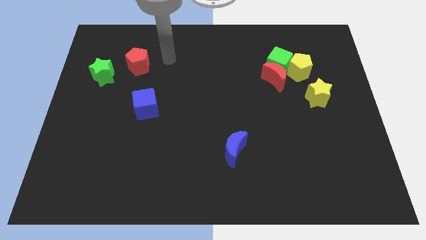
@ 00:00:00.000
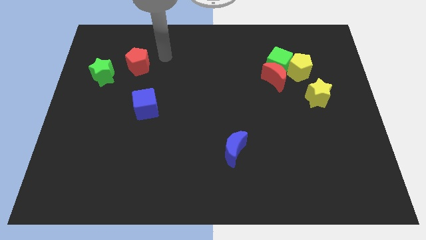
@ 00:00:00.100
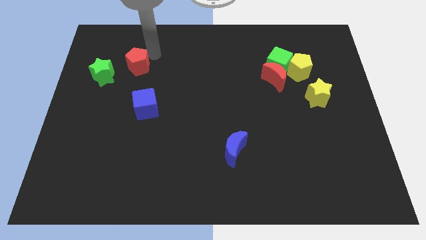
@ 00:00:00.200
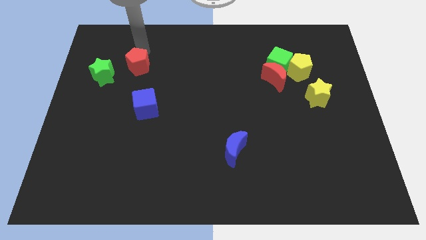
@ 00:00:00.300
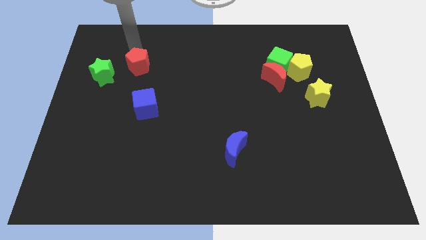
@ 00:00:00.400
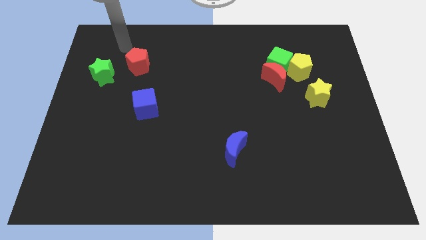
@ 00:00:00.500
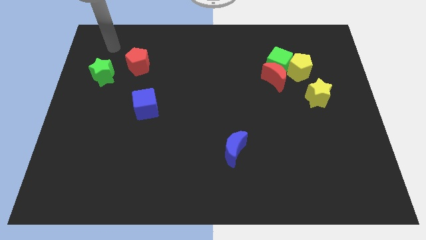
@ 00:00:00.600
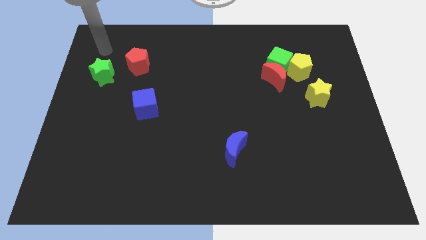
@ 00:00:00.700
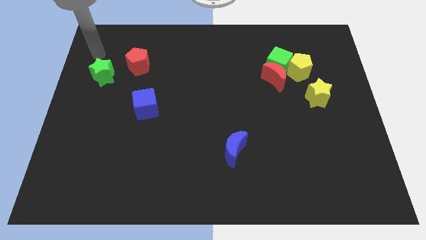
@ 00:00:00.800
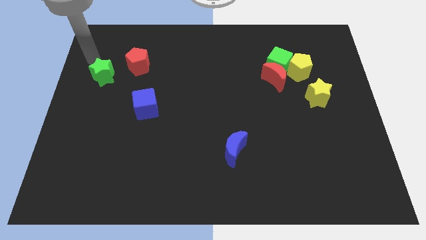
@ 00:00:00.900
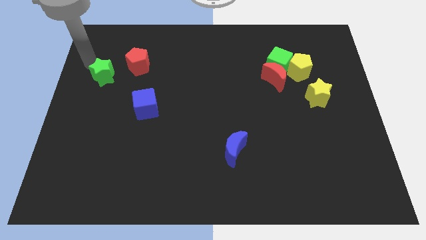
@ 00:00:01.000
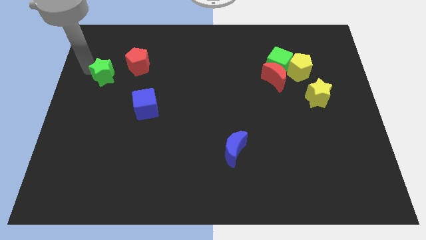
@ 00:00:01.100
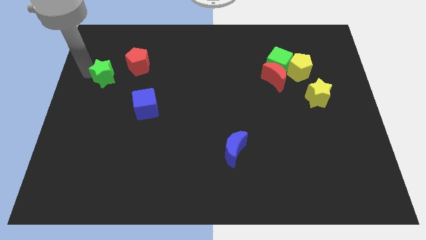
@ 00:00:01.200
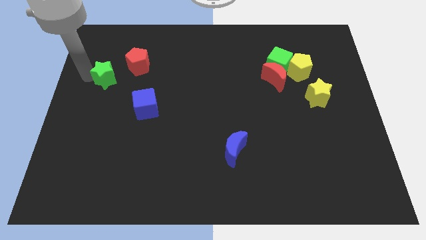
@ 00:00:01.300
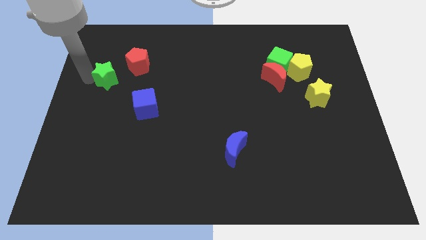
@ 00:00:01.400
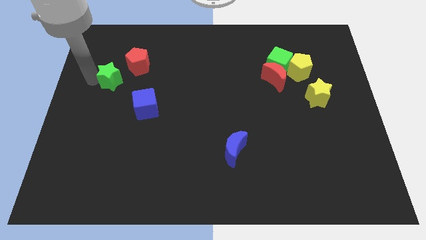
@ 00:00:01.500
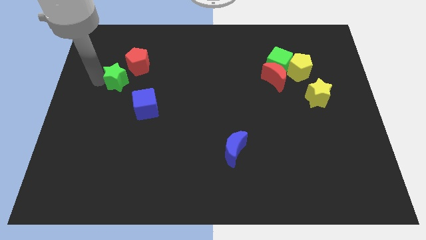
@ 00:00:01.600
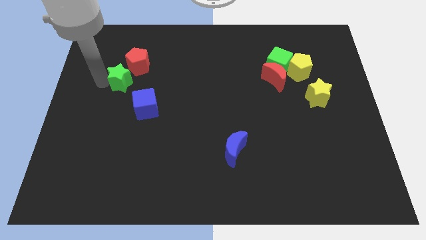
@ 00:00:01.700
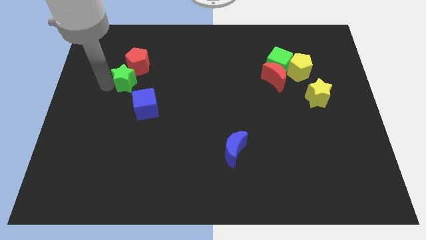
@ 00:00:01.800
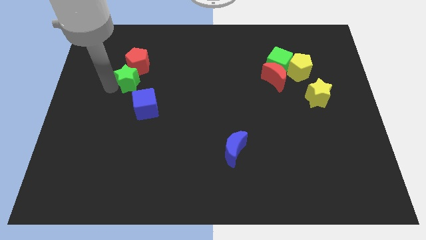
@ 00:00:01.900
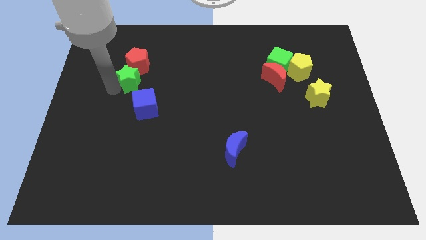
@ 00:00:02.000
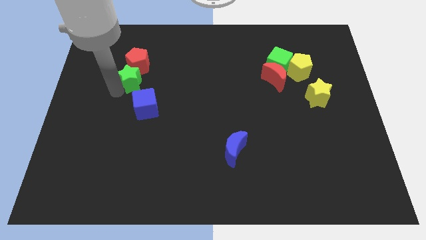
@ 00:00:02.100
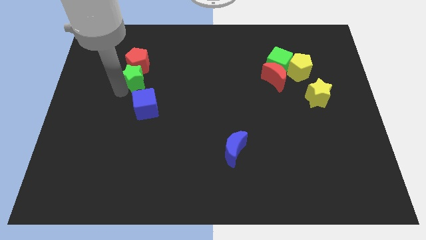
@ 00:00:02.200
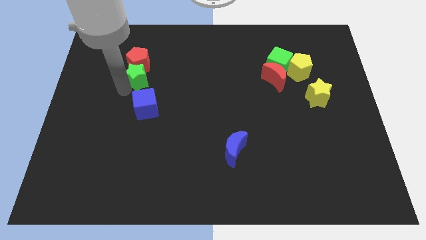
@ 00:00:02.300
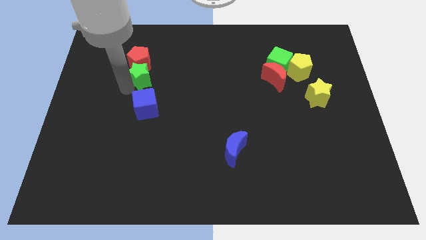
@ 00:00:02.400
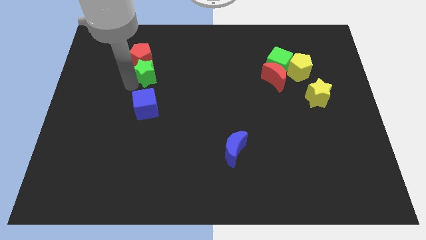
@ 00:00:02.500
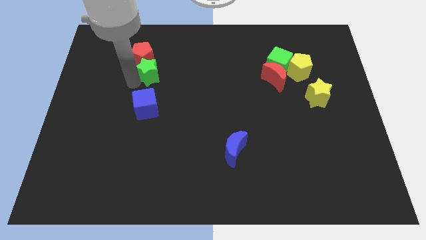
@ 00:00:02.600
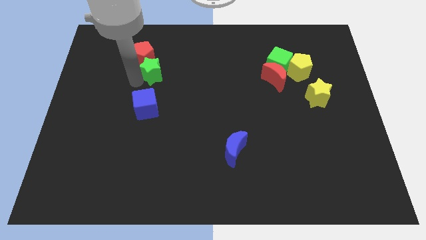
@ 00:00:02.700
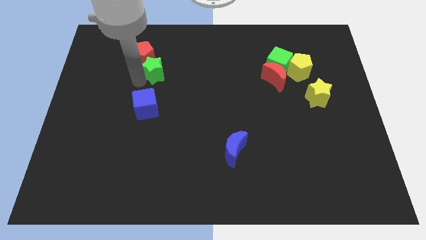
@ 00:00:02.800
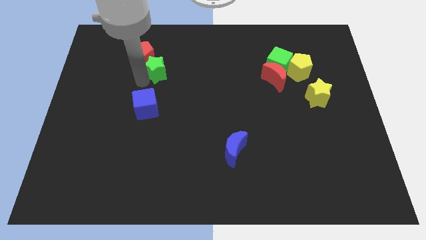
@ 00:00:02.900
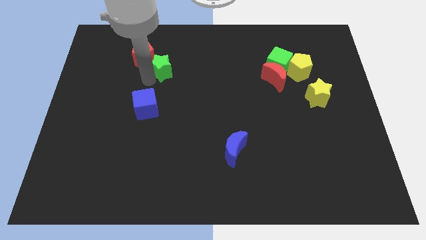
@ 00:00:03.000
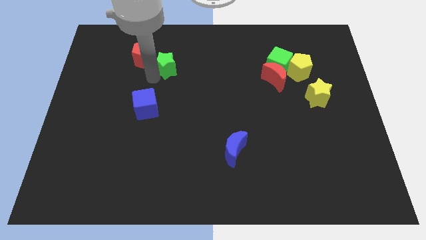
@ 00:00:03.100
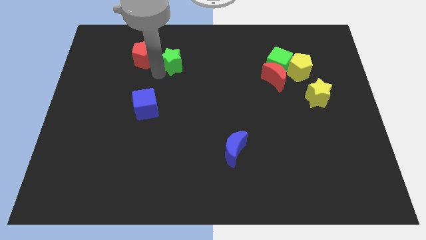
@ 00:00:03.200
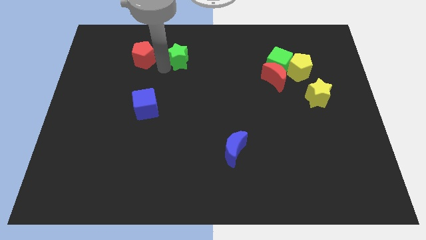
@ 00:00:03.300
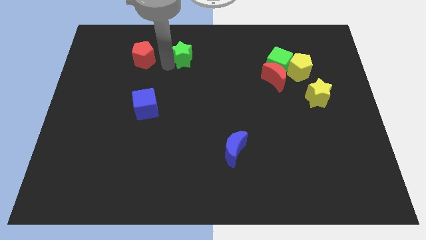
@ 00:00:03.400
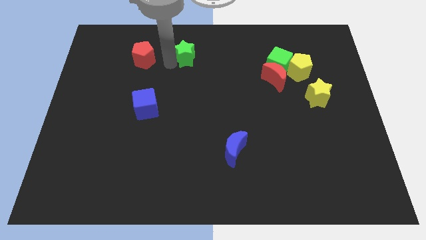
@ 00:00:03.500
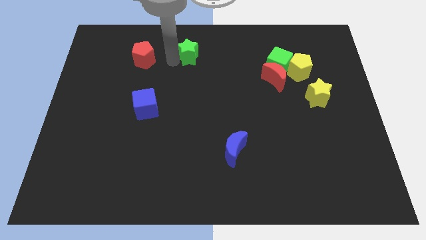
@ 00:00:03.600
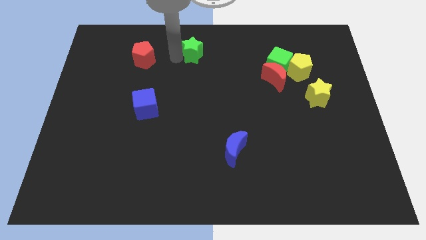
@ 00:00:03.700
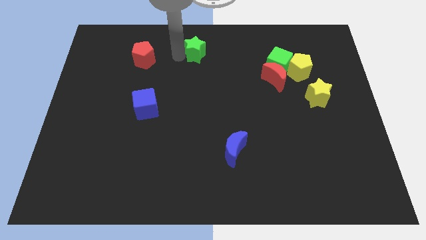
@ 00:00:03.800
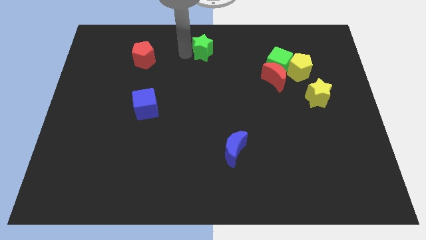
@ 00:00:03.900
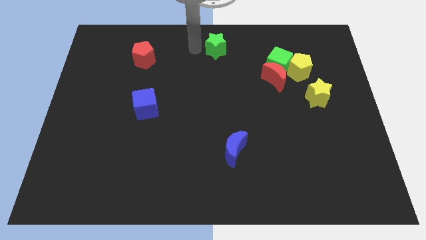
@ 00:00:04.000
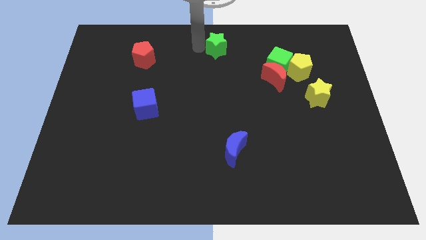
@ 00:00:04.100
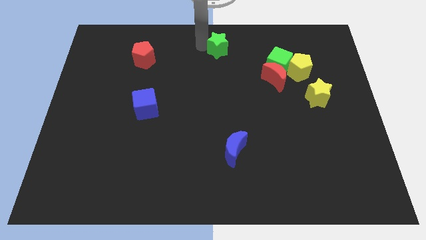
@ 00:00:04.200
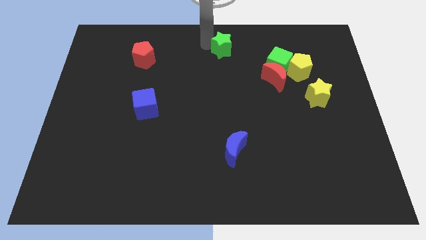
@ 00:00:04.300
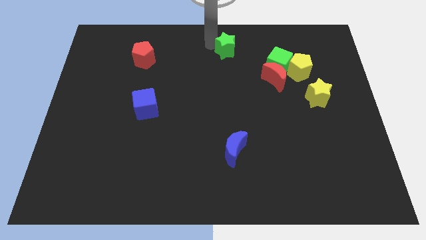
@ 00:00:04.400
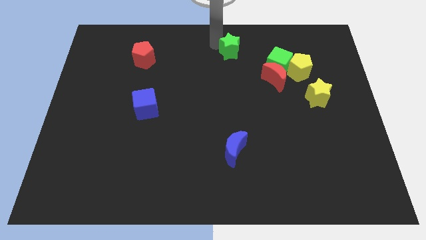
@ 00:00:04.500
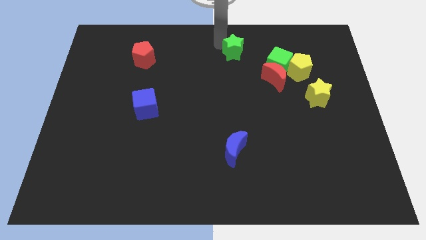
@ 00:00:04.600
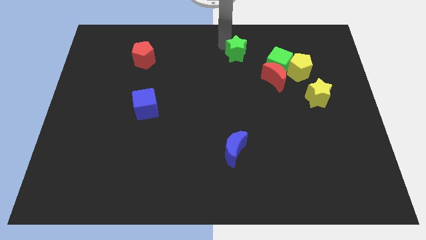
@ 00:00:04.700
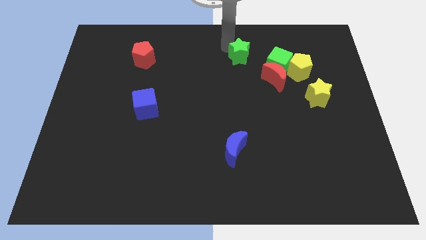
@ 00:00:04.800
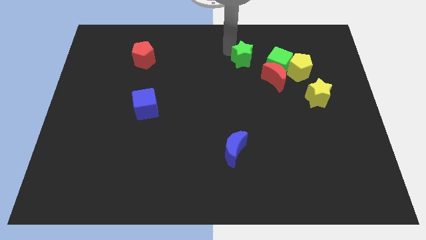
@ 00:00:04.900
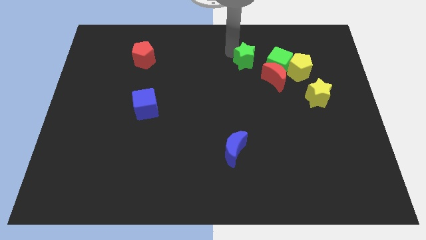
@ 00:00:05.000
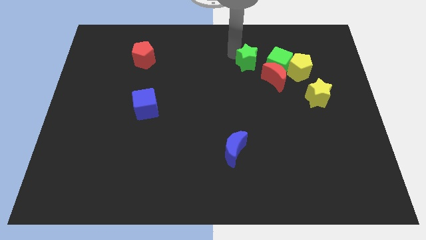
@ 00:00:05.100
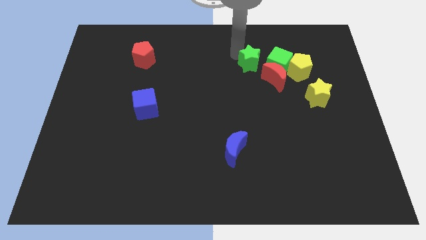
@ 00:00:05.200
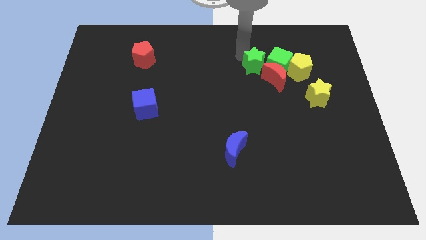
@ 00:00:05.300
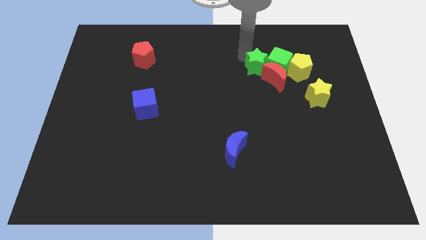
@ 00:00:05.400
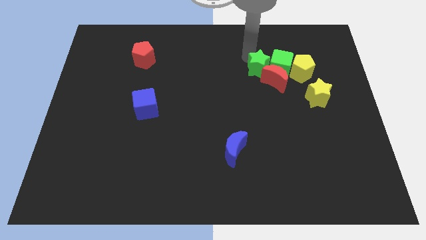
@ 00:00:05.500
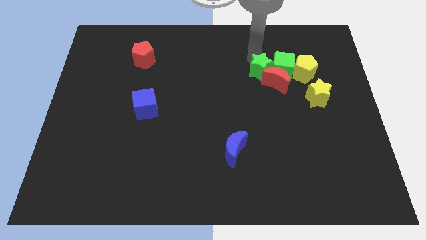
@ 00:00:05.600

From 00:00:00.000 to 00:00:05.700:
put the green star close to the green cube

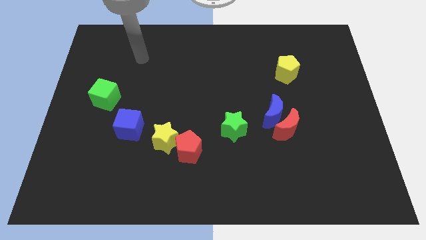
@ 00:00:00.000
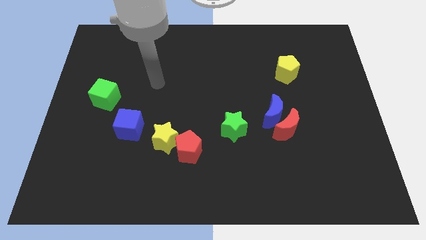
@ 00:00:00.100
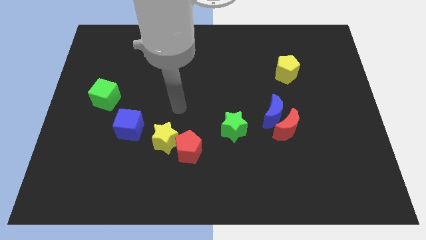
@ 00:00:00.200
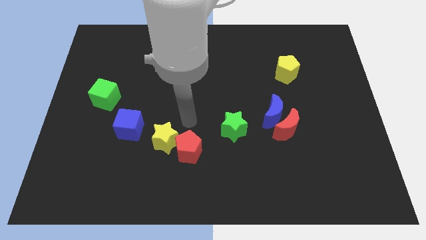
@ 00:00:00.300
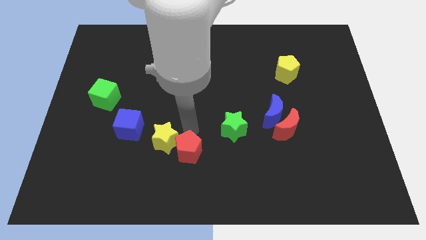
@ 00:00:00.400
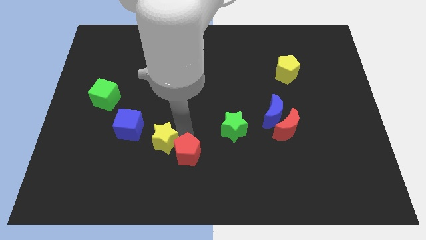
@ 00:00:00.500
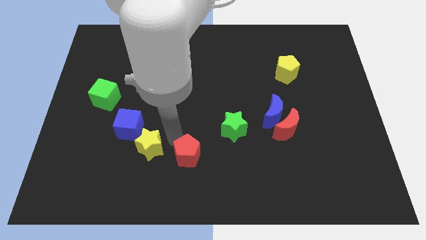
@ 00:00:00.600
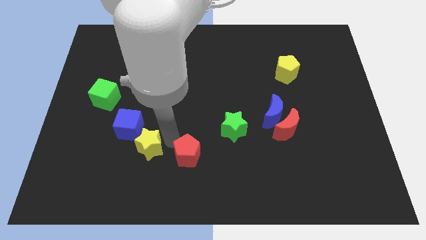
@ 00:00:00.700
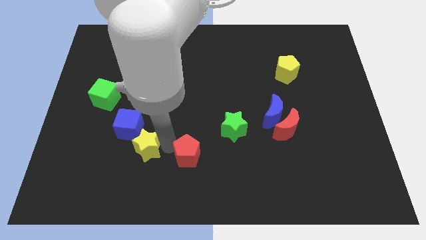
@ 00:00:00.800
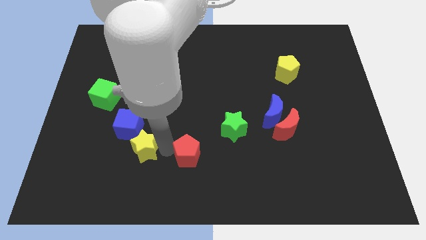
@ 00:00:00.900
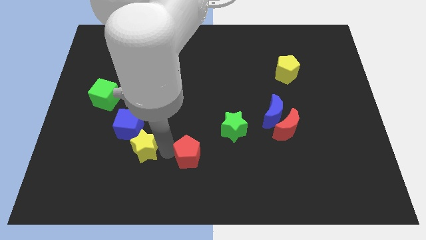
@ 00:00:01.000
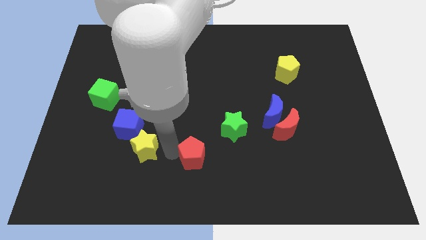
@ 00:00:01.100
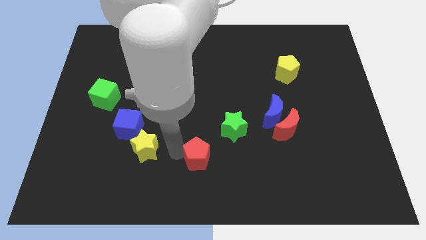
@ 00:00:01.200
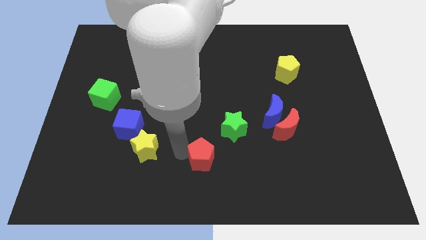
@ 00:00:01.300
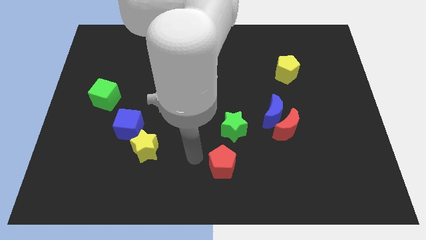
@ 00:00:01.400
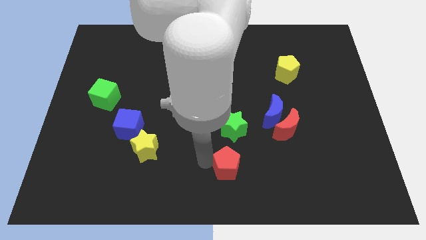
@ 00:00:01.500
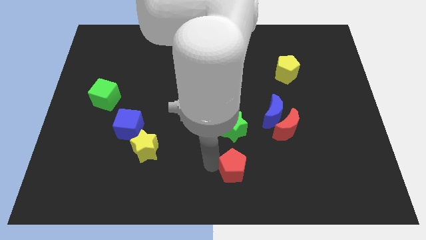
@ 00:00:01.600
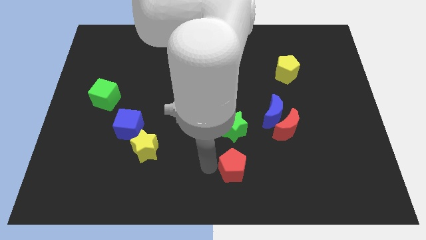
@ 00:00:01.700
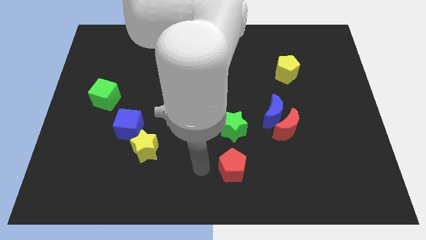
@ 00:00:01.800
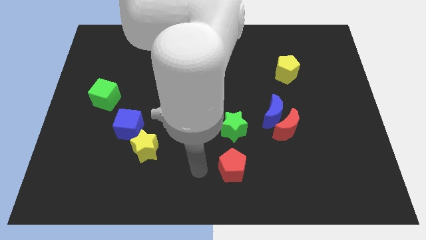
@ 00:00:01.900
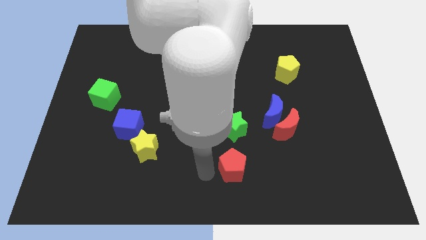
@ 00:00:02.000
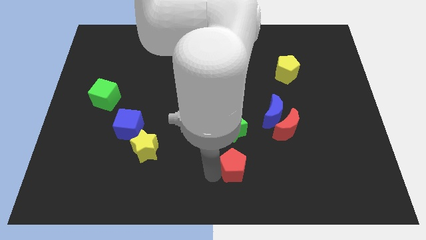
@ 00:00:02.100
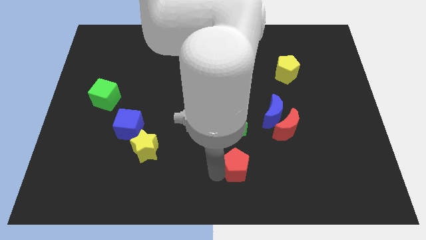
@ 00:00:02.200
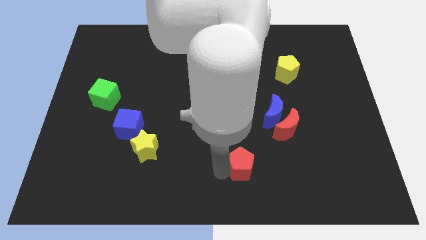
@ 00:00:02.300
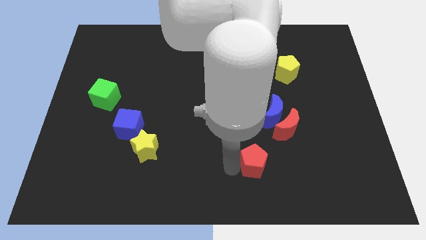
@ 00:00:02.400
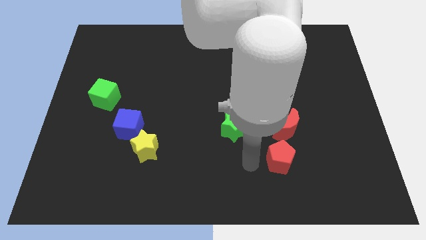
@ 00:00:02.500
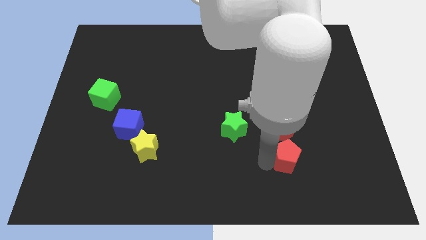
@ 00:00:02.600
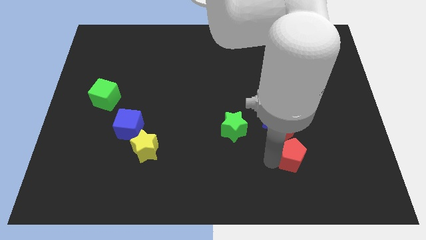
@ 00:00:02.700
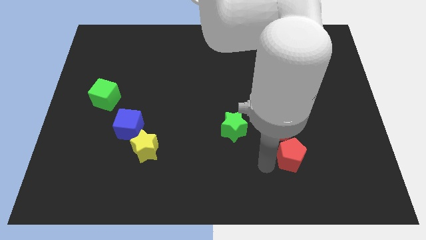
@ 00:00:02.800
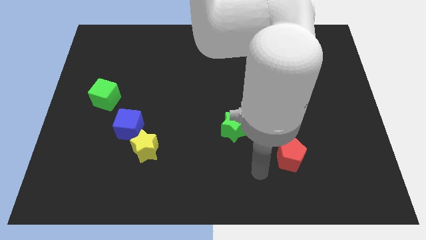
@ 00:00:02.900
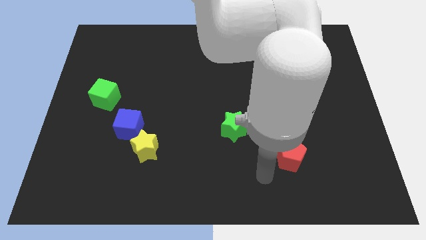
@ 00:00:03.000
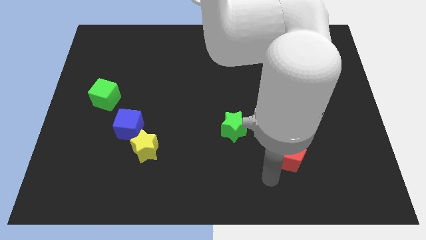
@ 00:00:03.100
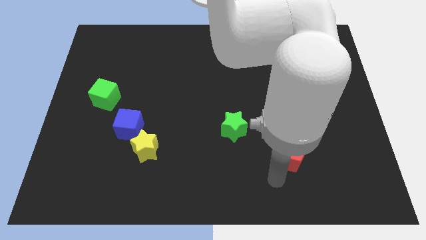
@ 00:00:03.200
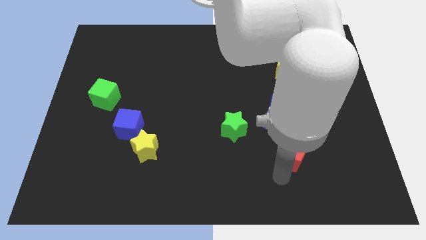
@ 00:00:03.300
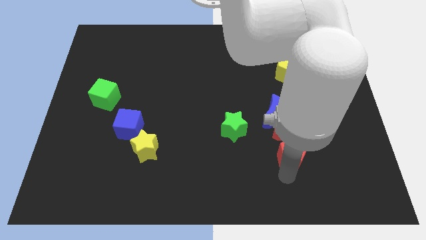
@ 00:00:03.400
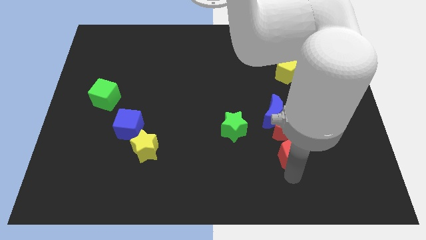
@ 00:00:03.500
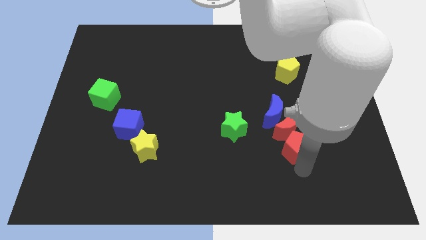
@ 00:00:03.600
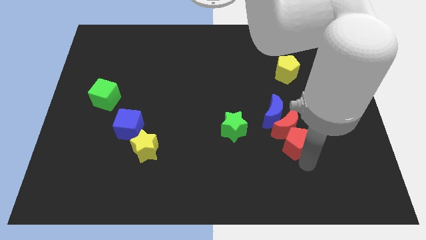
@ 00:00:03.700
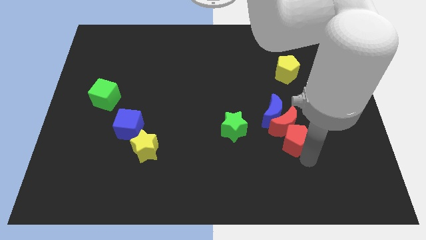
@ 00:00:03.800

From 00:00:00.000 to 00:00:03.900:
slide the red pentagon towards the red moon
